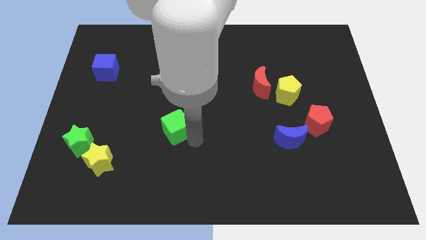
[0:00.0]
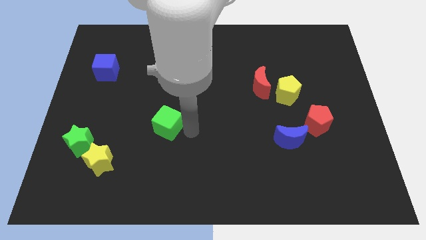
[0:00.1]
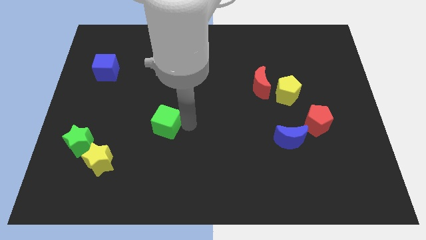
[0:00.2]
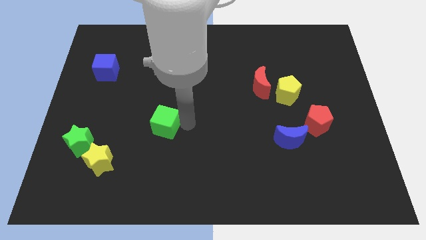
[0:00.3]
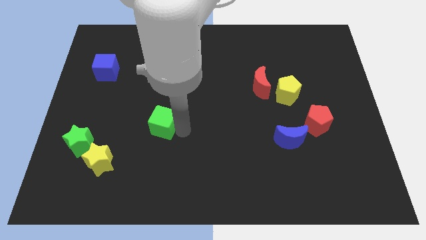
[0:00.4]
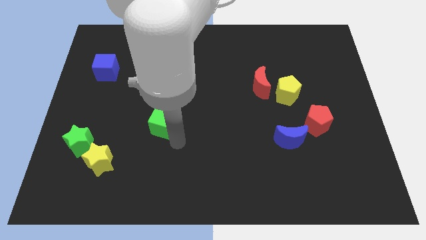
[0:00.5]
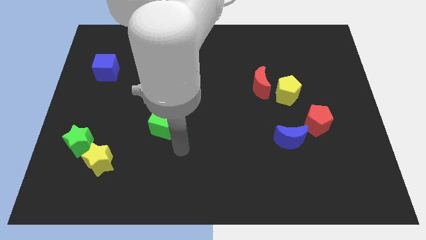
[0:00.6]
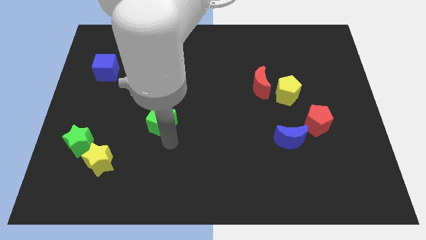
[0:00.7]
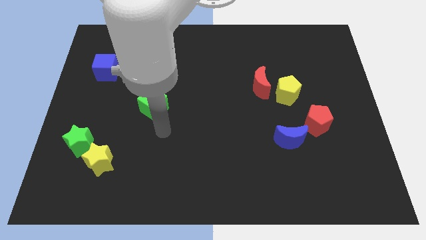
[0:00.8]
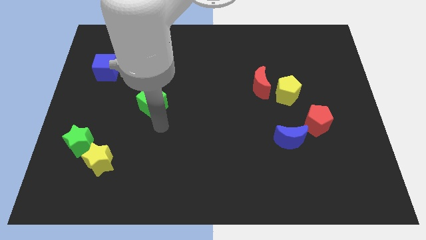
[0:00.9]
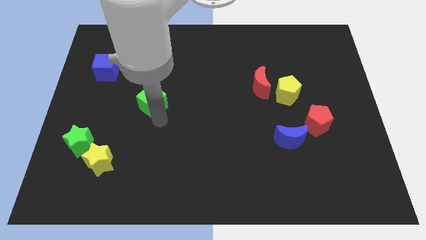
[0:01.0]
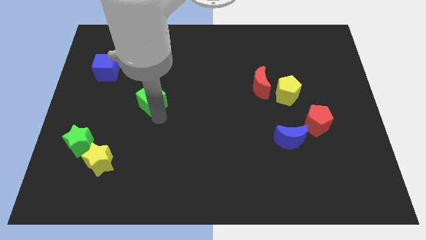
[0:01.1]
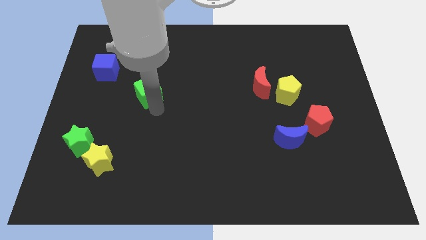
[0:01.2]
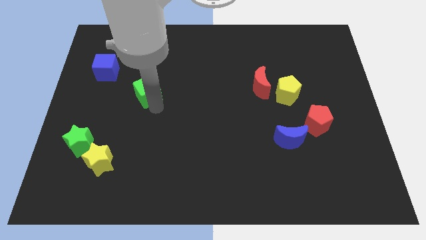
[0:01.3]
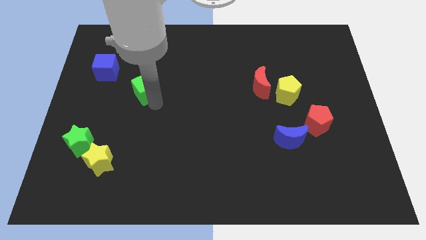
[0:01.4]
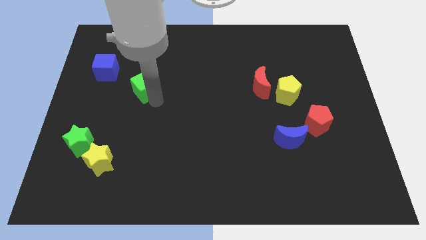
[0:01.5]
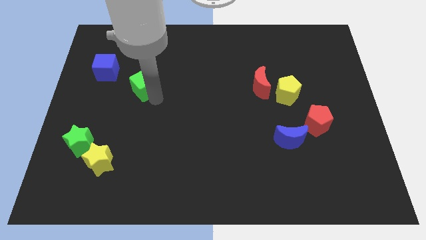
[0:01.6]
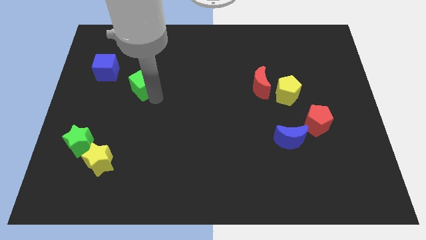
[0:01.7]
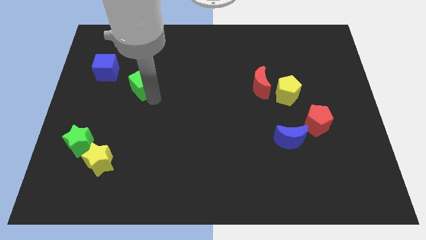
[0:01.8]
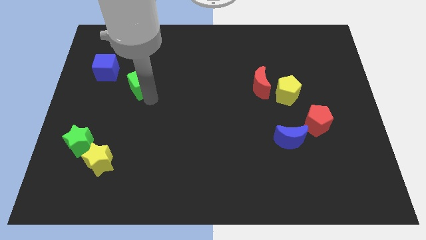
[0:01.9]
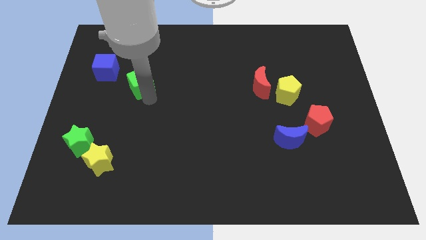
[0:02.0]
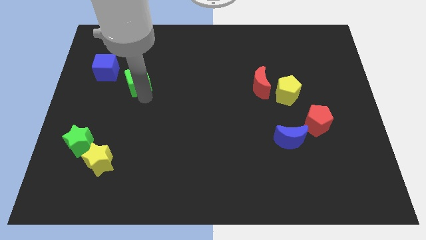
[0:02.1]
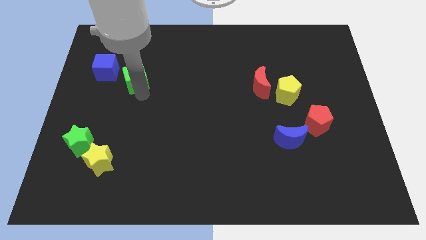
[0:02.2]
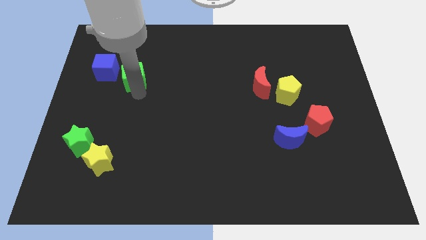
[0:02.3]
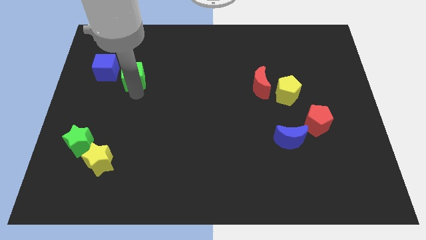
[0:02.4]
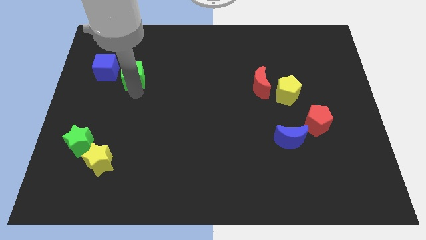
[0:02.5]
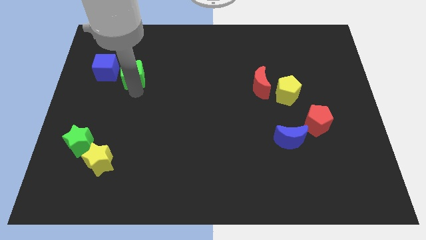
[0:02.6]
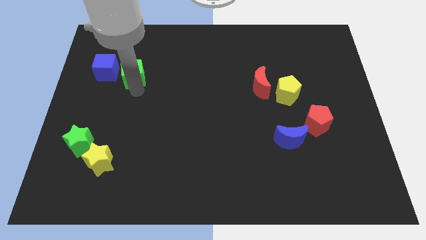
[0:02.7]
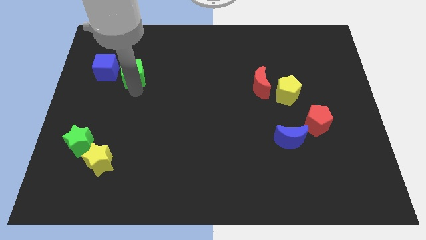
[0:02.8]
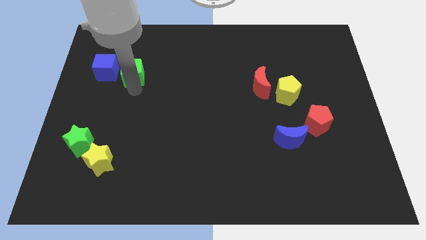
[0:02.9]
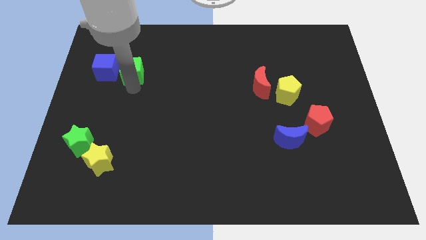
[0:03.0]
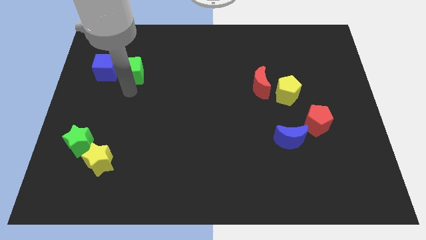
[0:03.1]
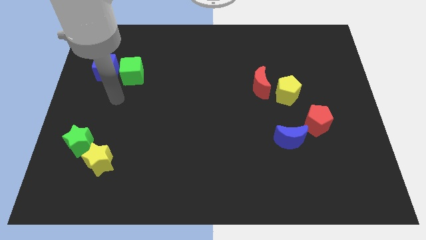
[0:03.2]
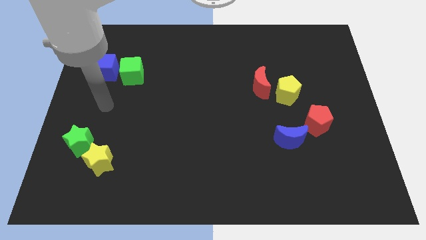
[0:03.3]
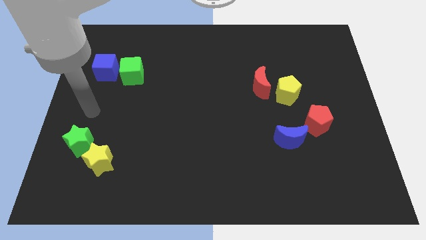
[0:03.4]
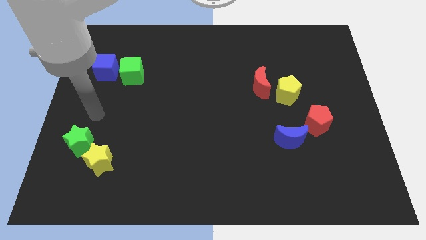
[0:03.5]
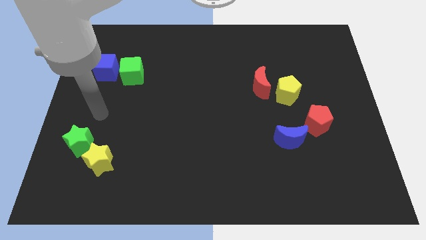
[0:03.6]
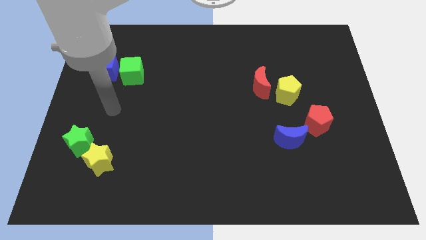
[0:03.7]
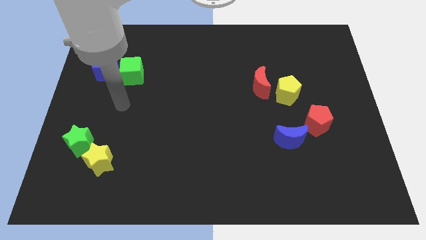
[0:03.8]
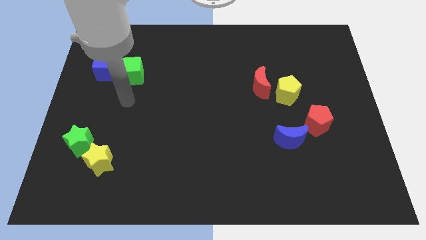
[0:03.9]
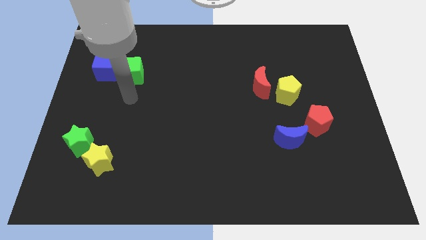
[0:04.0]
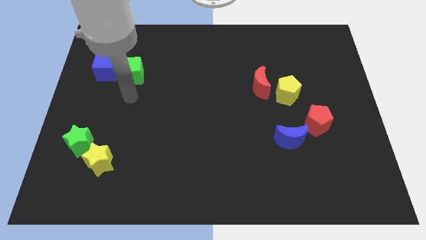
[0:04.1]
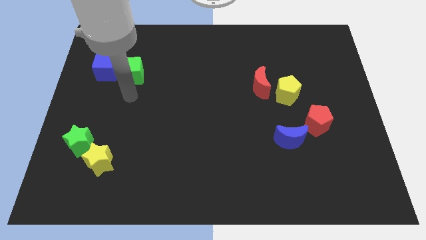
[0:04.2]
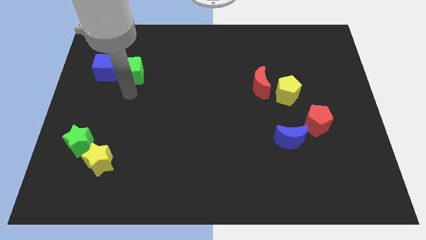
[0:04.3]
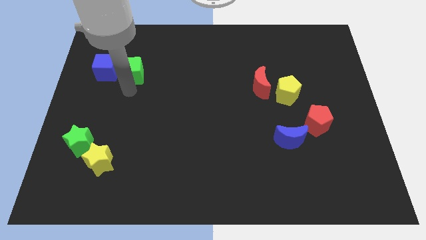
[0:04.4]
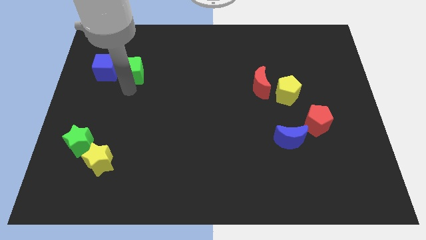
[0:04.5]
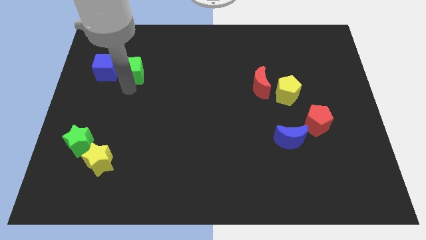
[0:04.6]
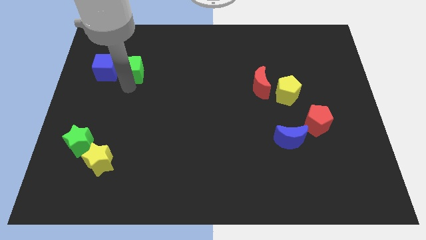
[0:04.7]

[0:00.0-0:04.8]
place the green cube right to the blue cube

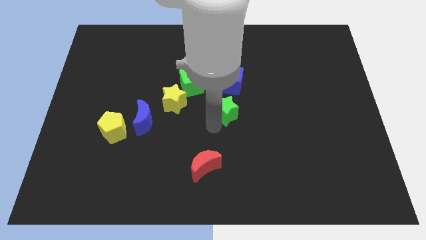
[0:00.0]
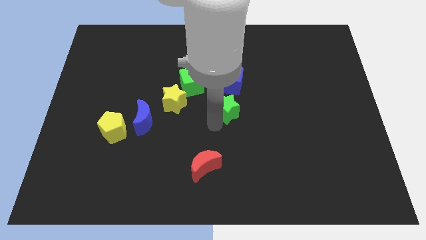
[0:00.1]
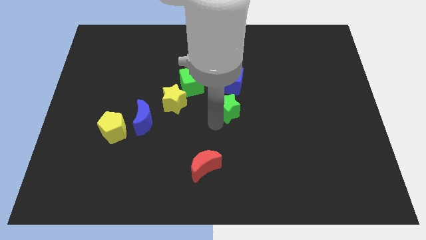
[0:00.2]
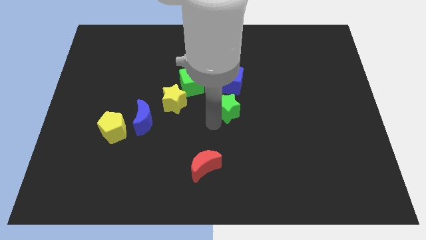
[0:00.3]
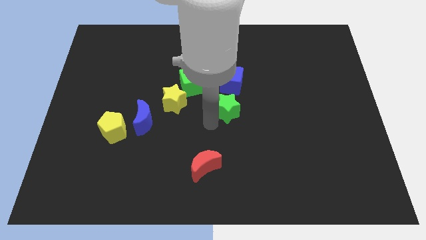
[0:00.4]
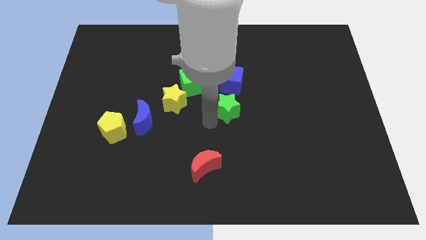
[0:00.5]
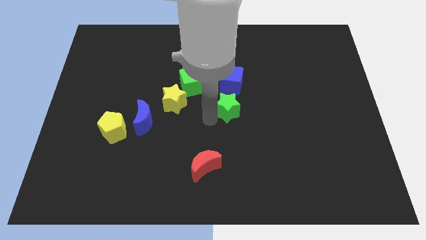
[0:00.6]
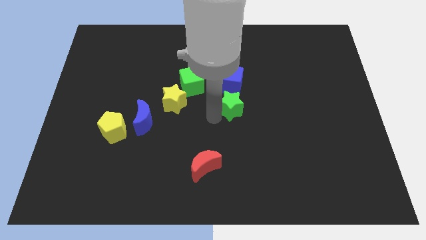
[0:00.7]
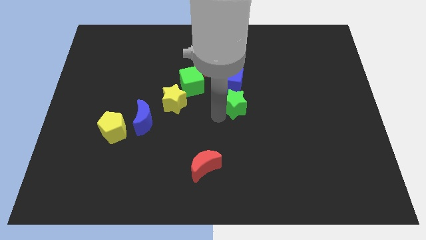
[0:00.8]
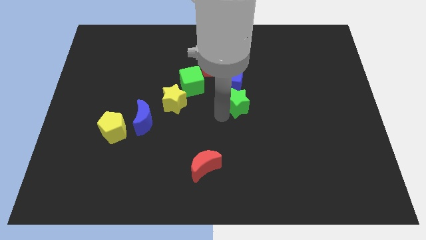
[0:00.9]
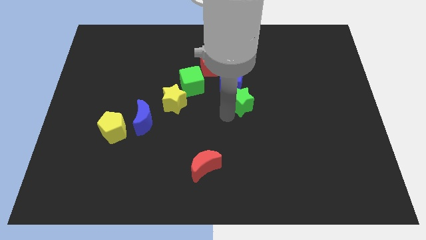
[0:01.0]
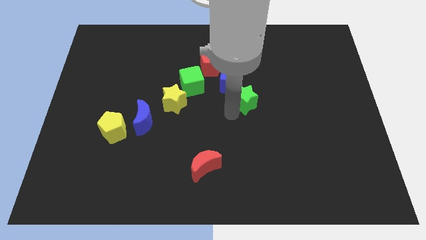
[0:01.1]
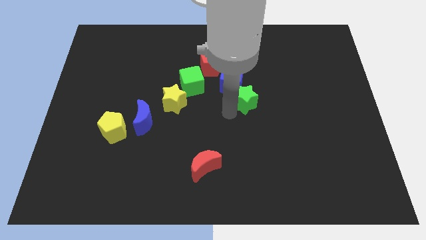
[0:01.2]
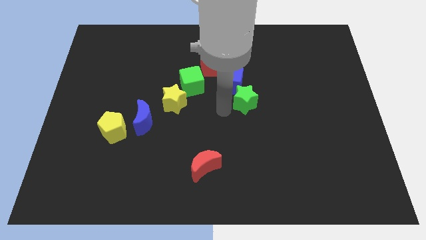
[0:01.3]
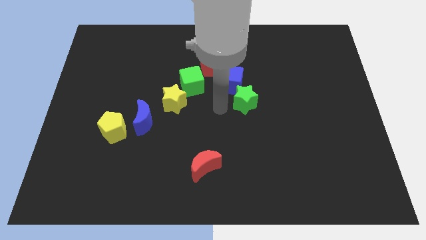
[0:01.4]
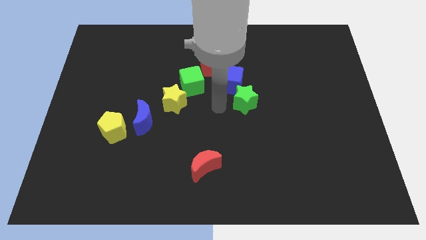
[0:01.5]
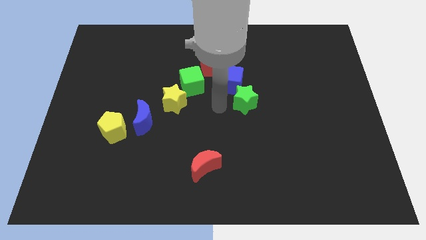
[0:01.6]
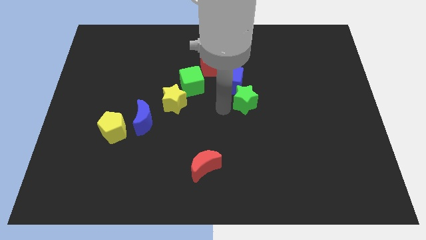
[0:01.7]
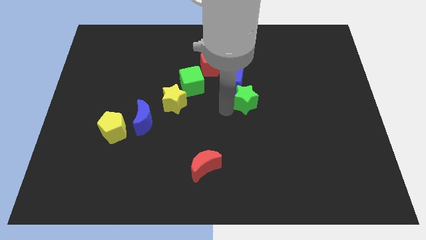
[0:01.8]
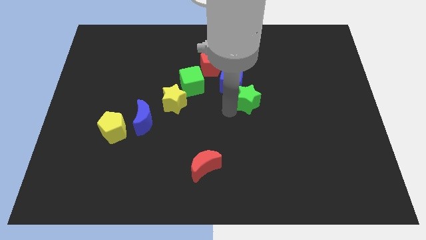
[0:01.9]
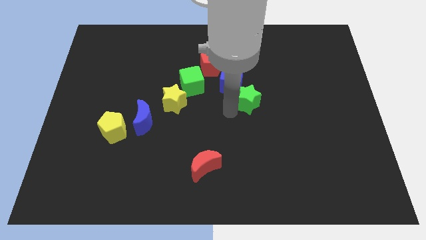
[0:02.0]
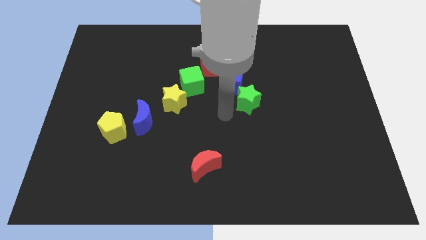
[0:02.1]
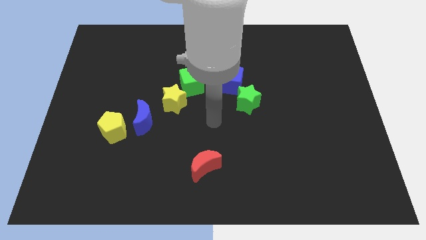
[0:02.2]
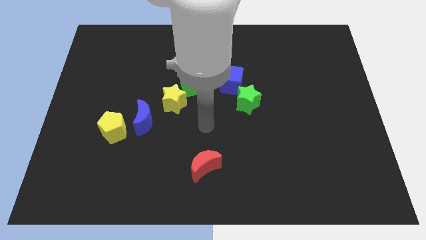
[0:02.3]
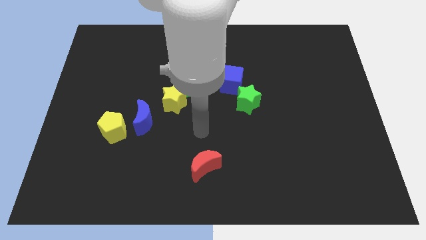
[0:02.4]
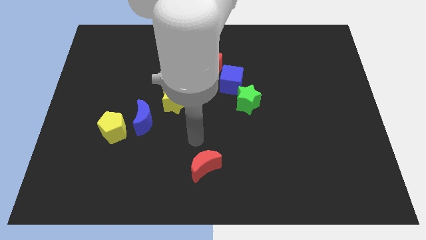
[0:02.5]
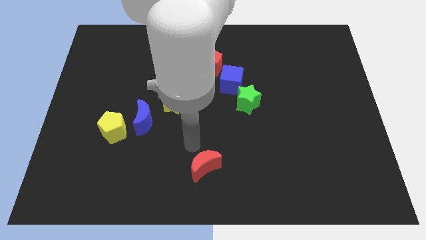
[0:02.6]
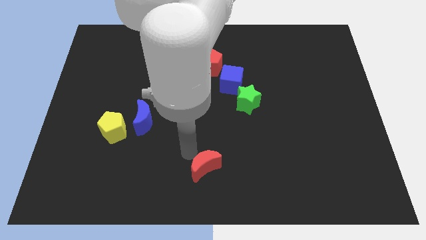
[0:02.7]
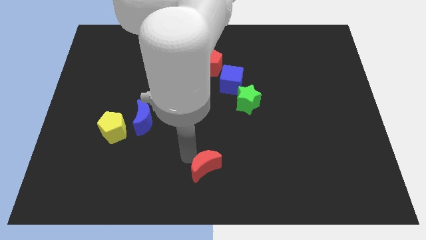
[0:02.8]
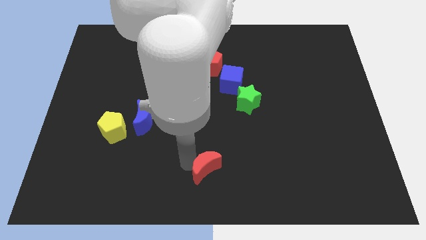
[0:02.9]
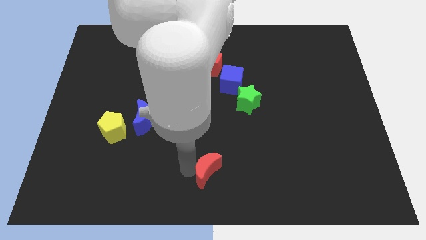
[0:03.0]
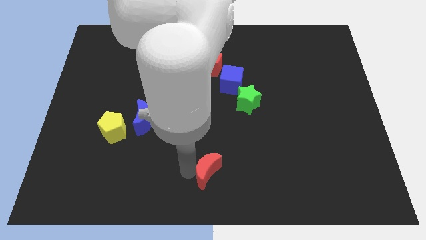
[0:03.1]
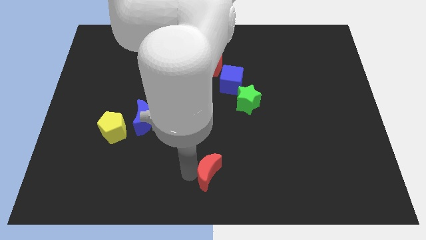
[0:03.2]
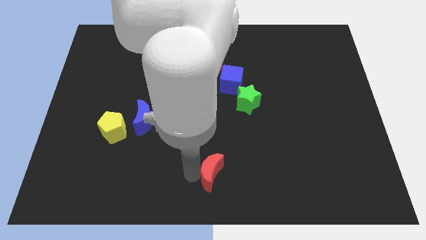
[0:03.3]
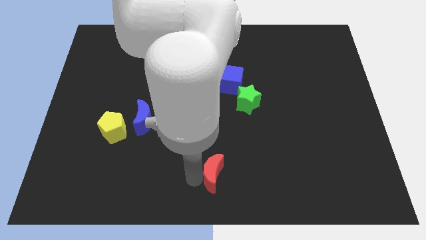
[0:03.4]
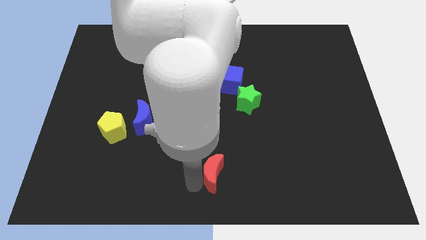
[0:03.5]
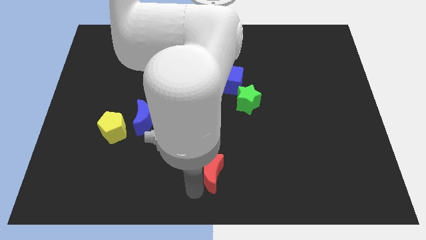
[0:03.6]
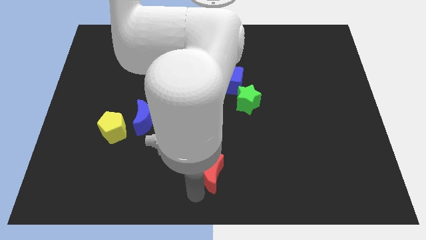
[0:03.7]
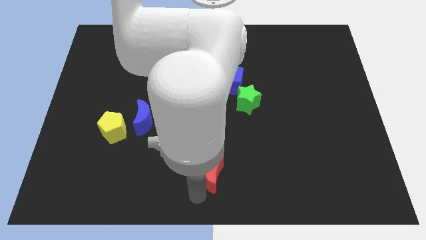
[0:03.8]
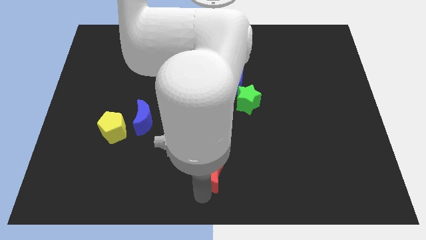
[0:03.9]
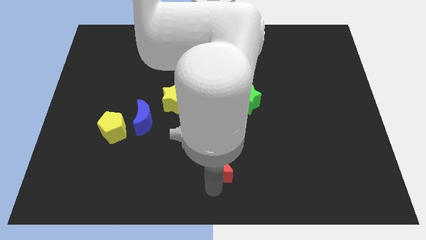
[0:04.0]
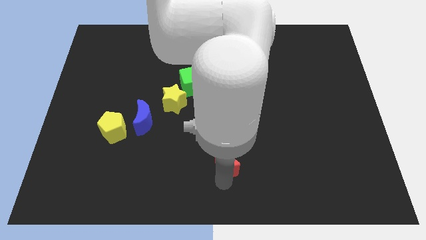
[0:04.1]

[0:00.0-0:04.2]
move your arm away from the green star
